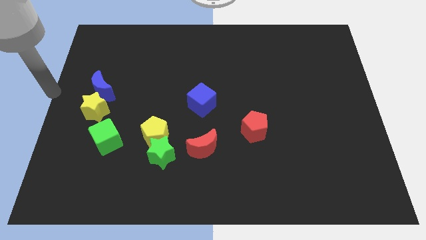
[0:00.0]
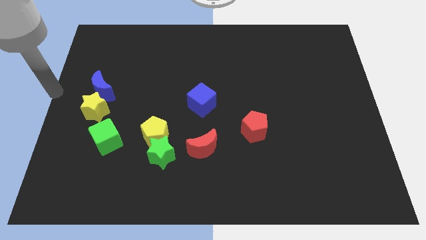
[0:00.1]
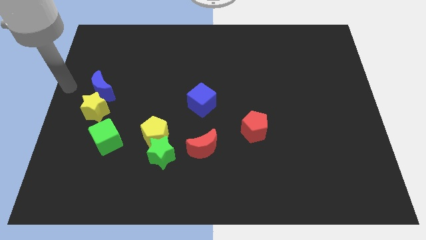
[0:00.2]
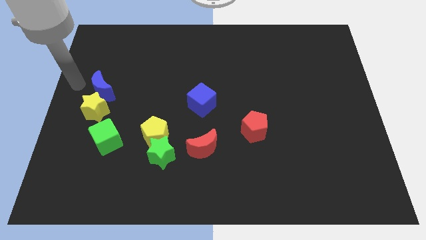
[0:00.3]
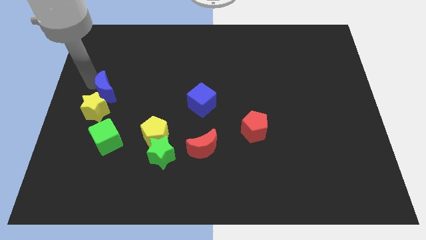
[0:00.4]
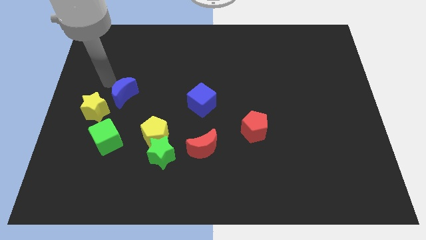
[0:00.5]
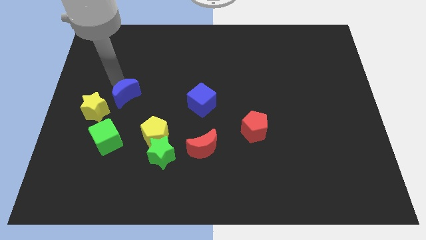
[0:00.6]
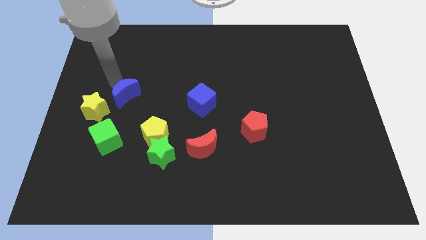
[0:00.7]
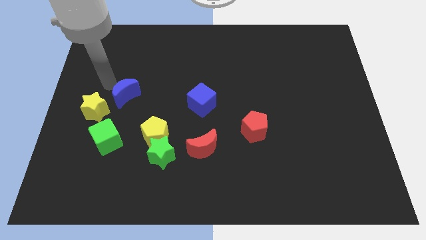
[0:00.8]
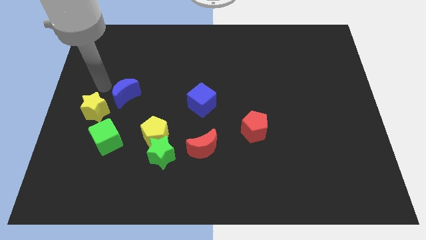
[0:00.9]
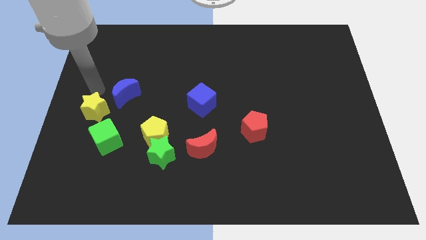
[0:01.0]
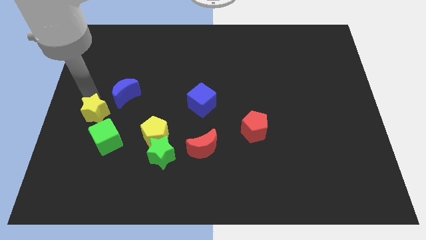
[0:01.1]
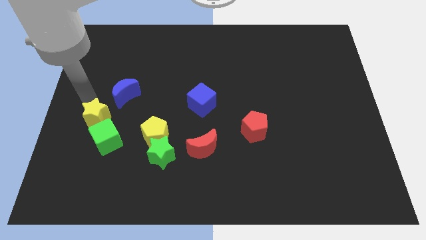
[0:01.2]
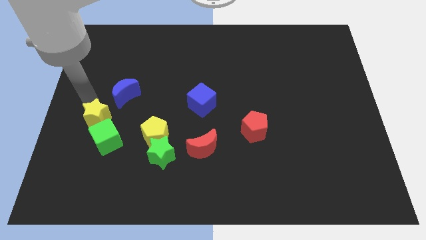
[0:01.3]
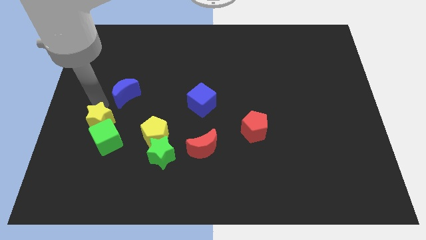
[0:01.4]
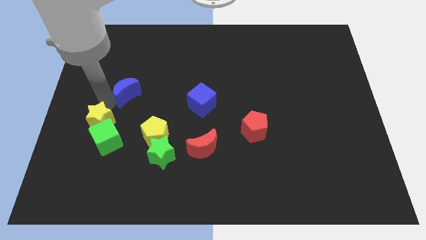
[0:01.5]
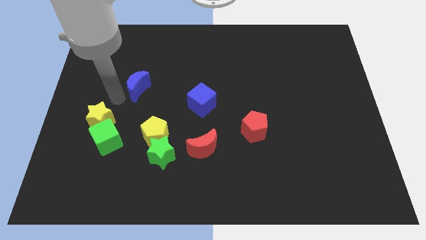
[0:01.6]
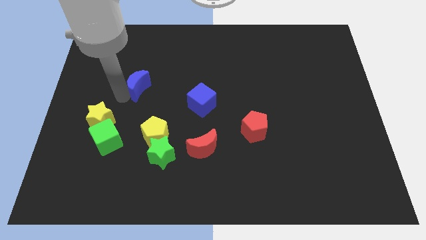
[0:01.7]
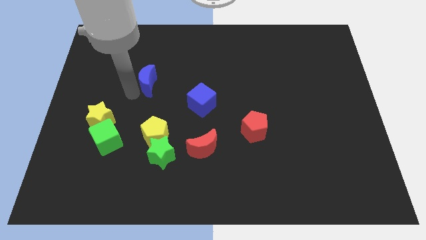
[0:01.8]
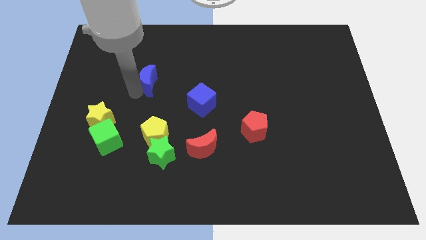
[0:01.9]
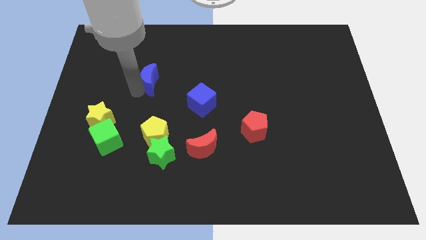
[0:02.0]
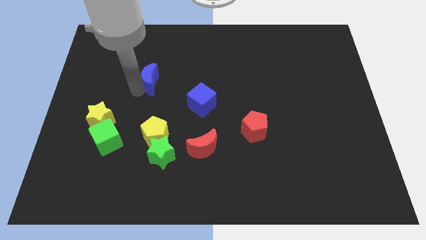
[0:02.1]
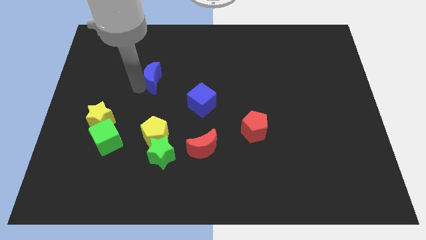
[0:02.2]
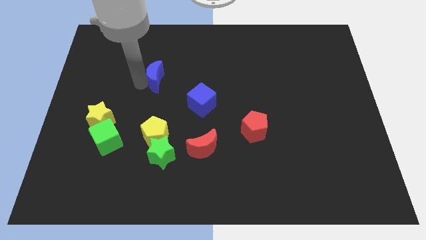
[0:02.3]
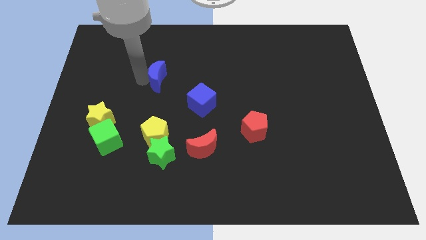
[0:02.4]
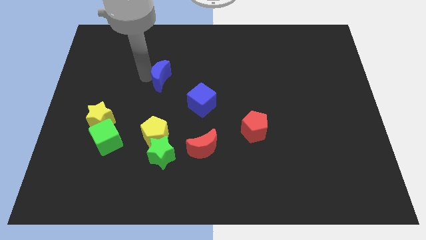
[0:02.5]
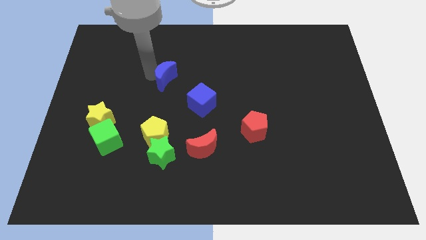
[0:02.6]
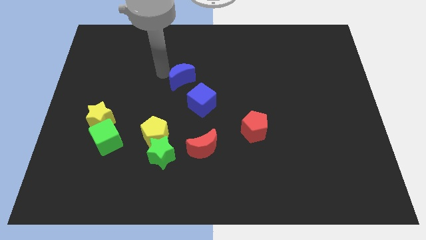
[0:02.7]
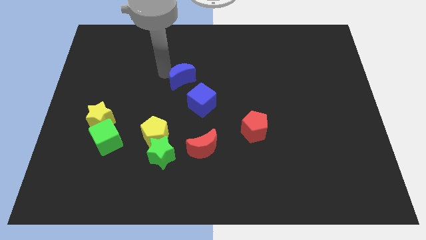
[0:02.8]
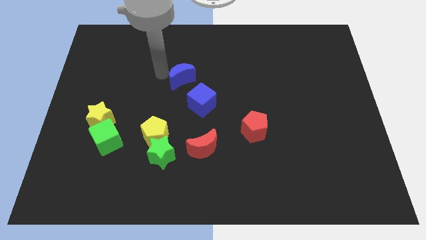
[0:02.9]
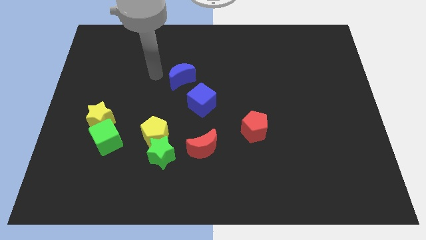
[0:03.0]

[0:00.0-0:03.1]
move your arm from the blue cube to blue moon

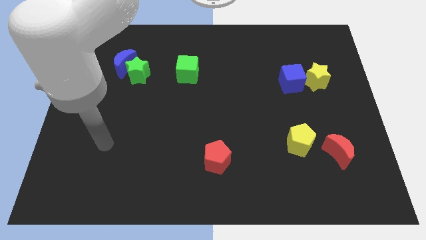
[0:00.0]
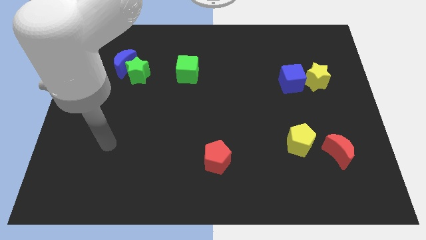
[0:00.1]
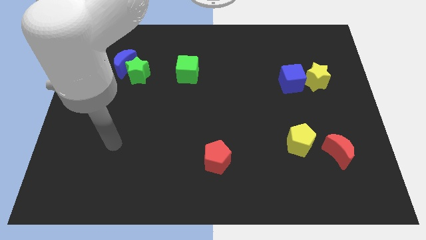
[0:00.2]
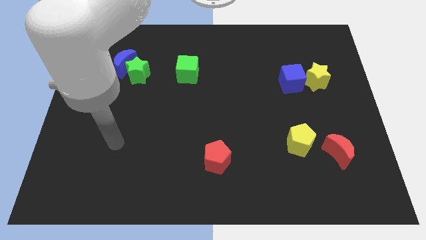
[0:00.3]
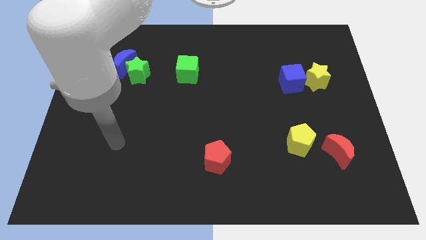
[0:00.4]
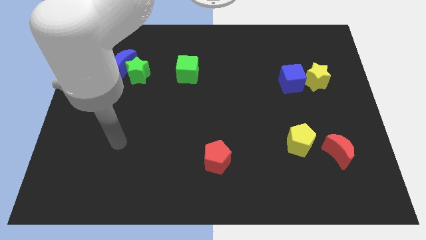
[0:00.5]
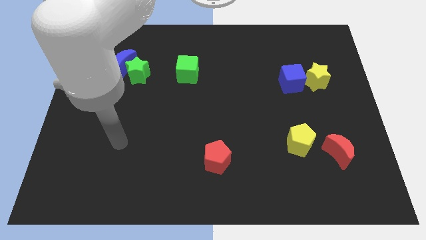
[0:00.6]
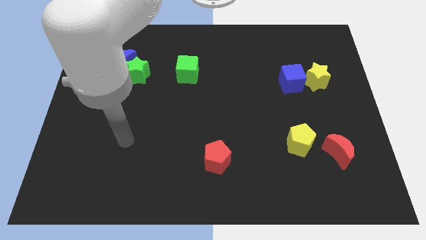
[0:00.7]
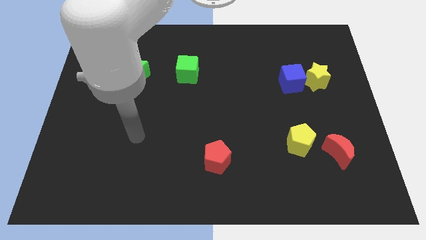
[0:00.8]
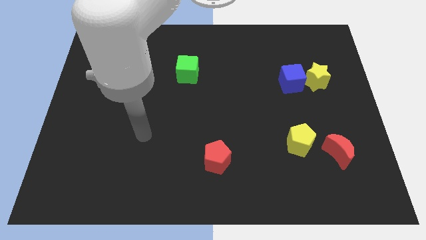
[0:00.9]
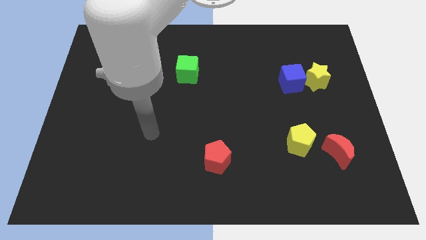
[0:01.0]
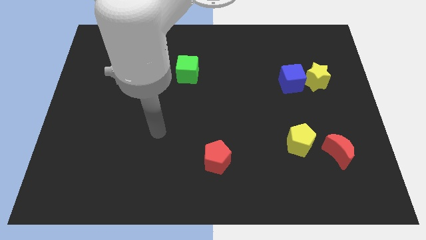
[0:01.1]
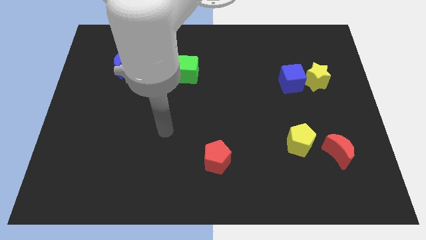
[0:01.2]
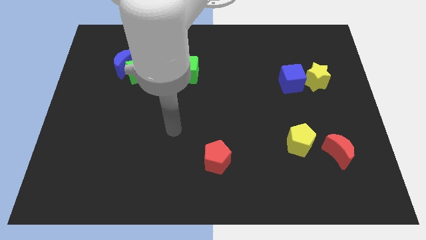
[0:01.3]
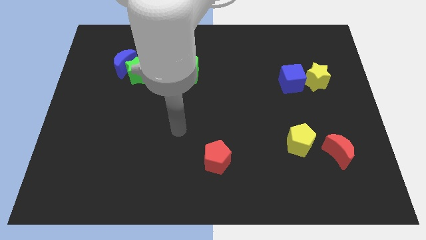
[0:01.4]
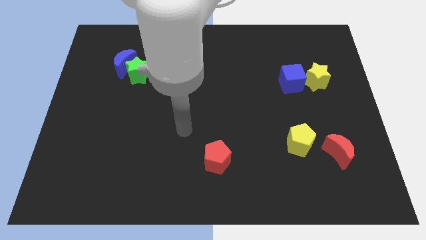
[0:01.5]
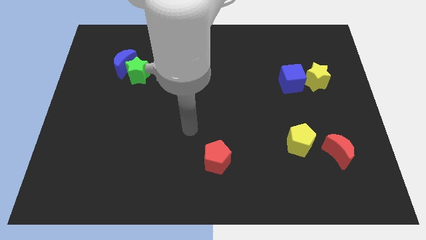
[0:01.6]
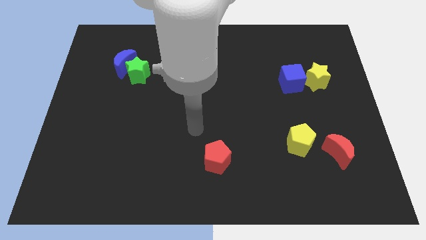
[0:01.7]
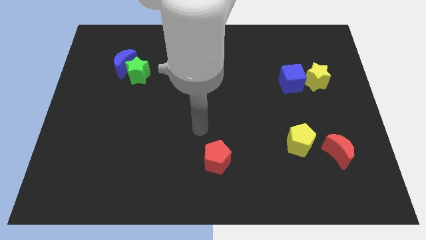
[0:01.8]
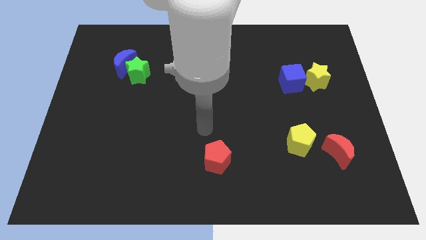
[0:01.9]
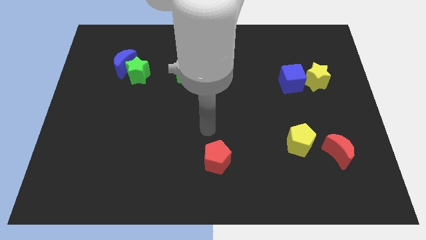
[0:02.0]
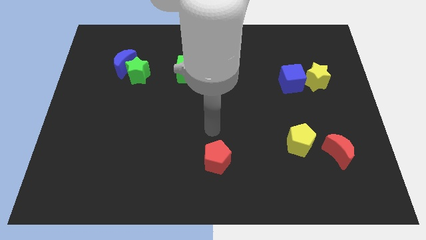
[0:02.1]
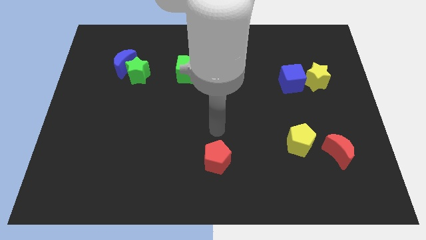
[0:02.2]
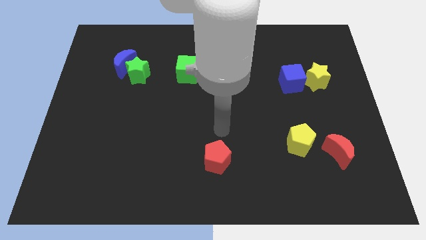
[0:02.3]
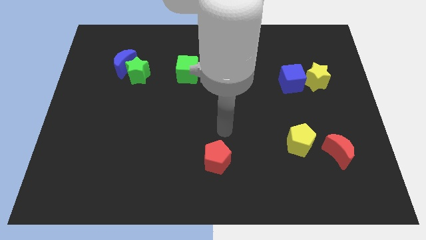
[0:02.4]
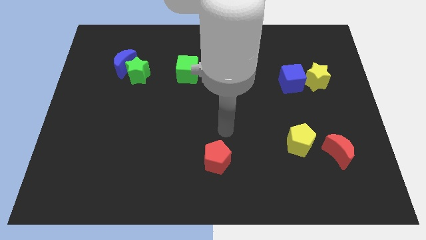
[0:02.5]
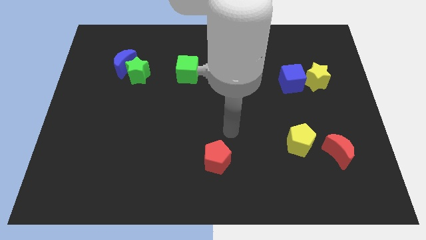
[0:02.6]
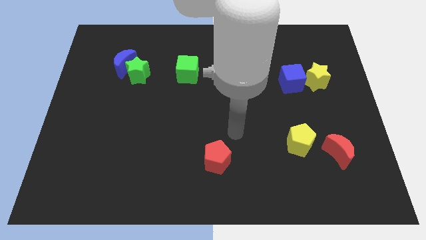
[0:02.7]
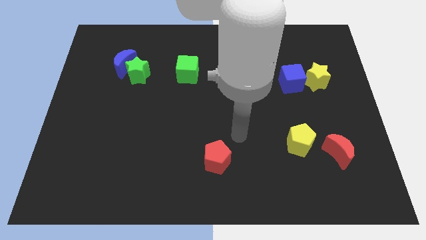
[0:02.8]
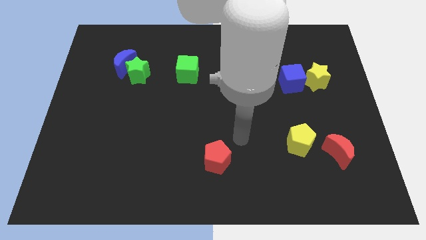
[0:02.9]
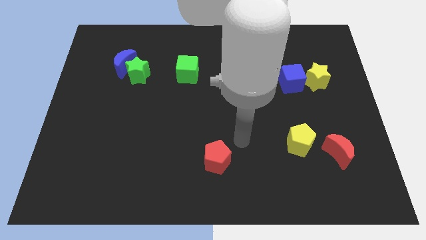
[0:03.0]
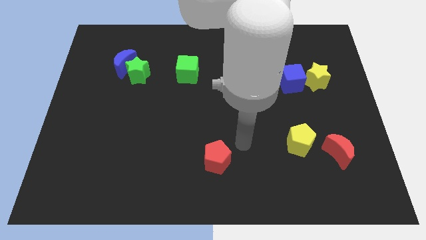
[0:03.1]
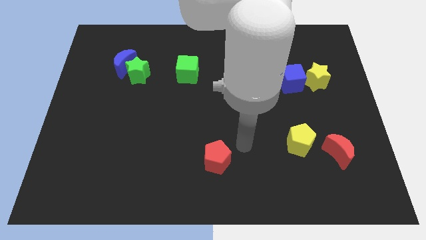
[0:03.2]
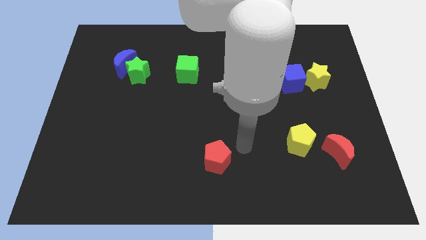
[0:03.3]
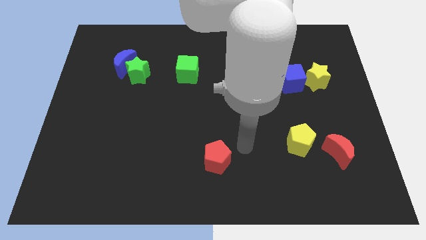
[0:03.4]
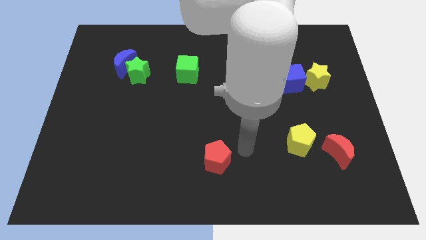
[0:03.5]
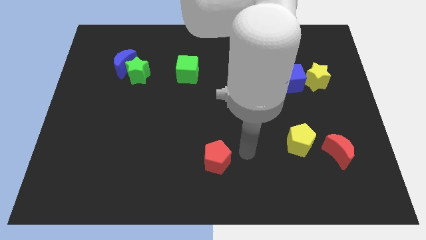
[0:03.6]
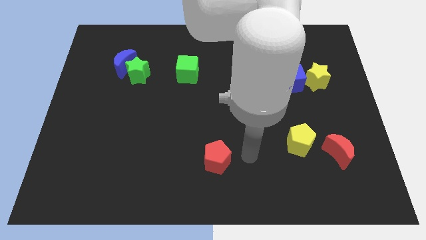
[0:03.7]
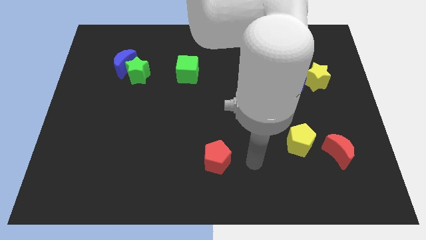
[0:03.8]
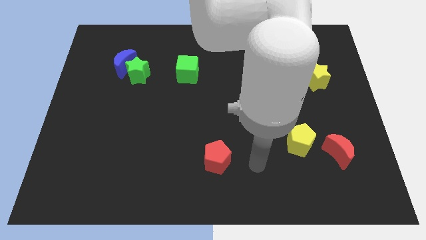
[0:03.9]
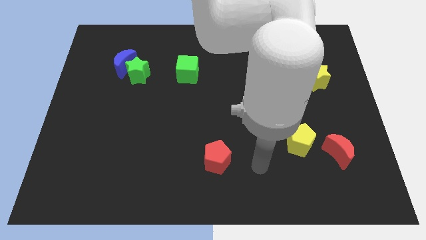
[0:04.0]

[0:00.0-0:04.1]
place your arm parallel right to the red pentagon

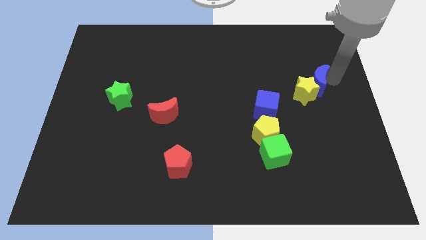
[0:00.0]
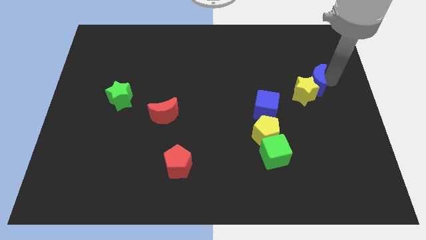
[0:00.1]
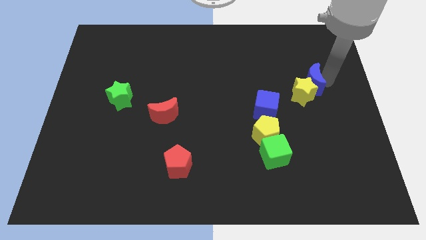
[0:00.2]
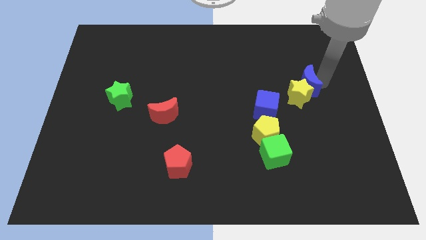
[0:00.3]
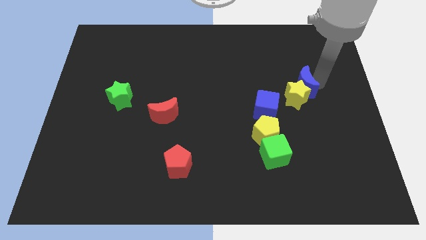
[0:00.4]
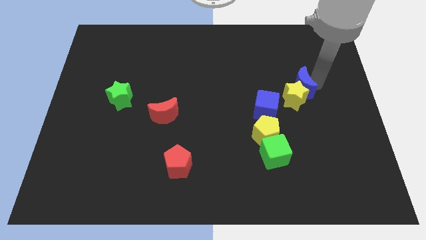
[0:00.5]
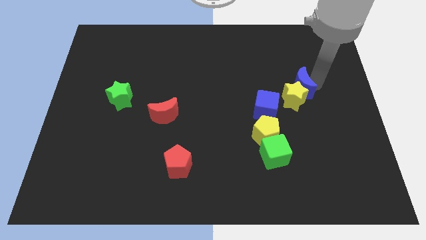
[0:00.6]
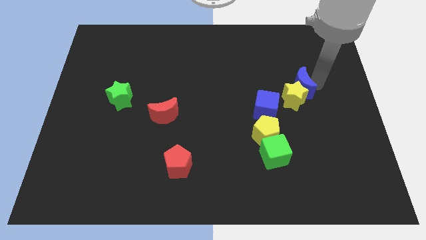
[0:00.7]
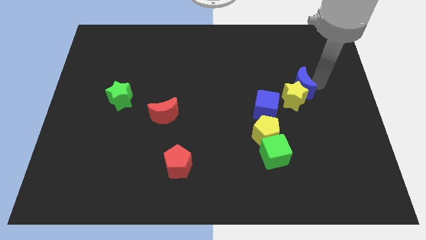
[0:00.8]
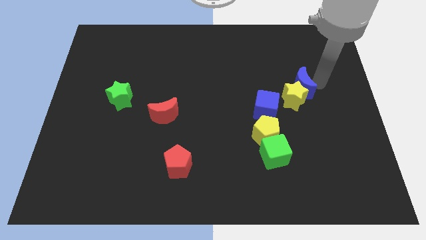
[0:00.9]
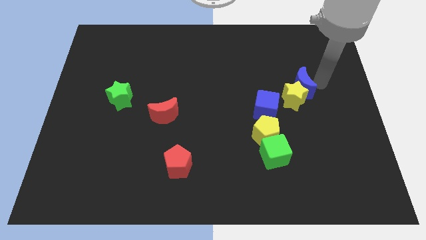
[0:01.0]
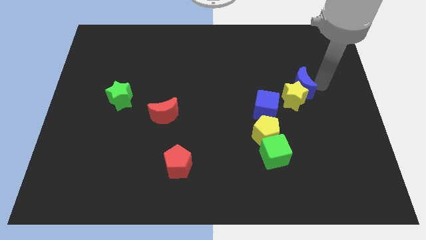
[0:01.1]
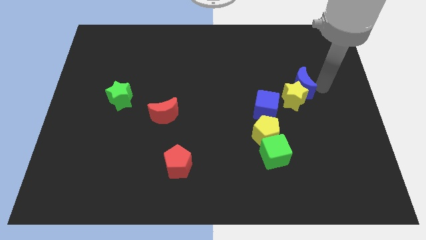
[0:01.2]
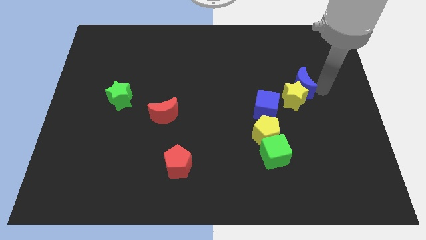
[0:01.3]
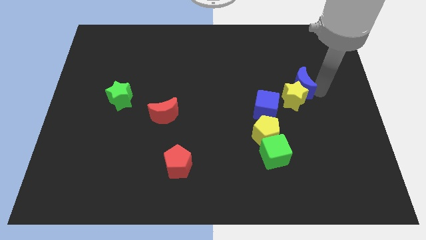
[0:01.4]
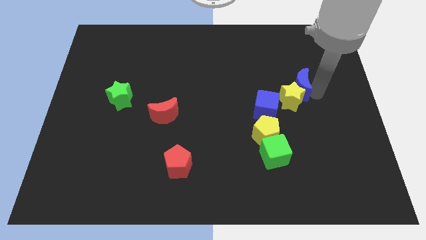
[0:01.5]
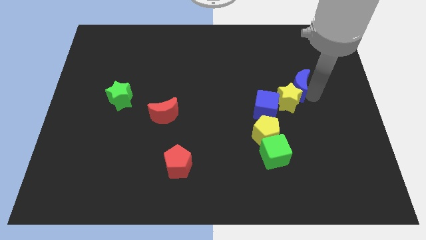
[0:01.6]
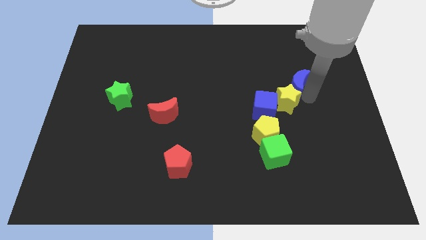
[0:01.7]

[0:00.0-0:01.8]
push the blue crescent and yellow star into the blue cube
